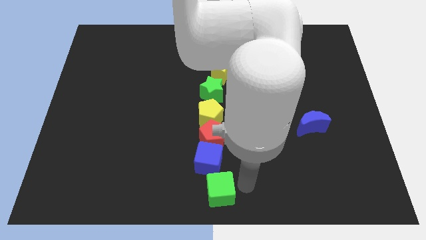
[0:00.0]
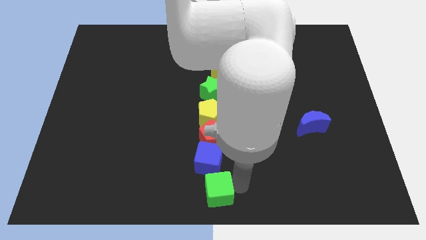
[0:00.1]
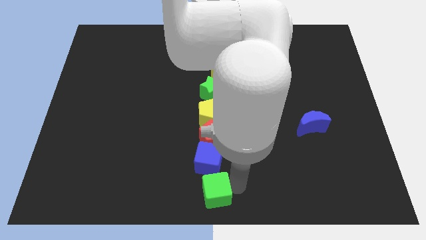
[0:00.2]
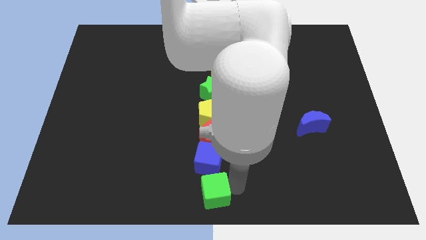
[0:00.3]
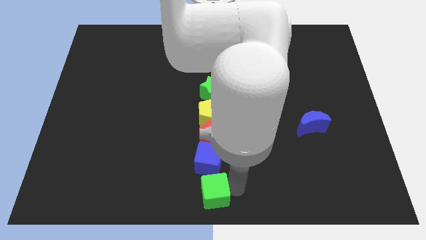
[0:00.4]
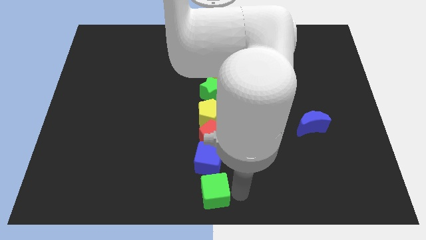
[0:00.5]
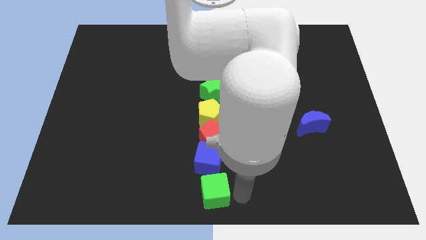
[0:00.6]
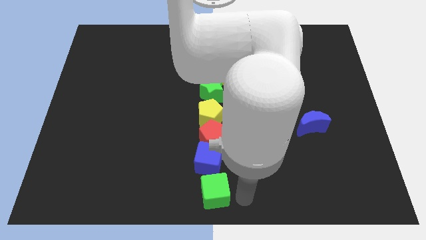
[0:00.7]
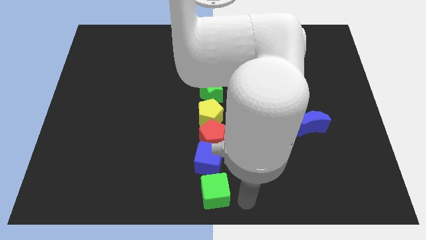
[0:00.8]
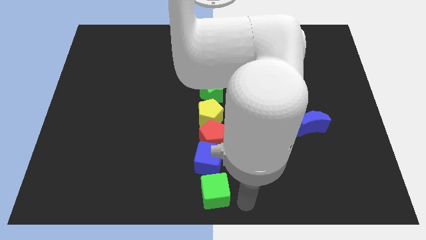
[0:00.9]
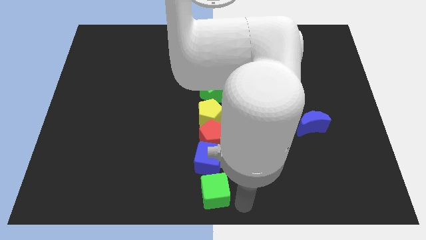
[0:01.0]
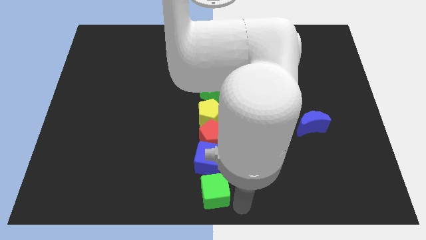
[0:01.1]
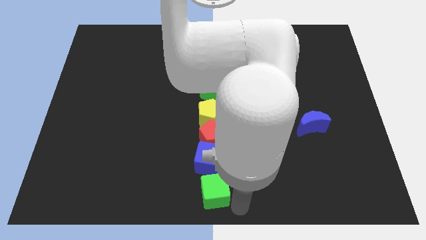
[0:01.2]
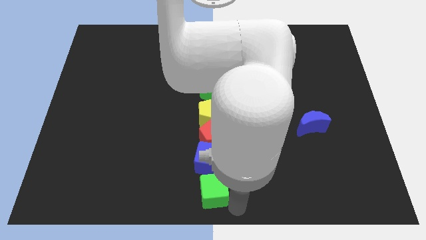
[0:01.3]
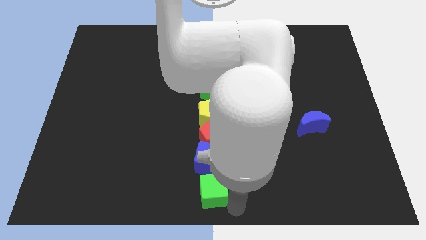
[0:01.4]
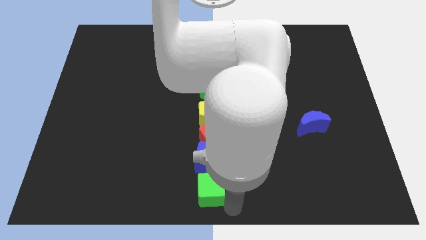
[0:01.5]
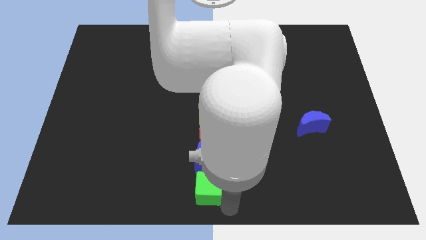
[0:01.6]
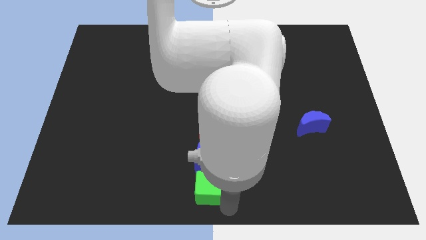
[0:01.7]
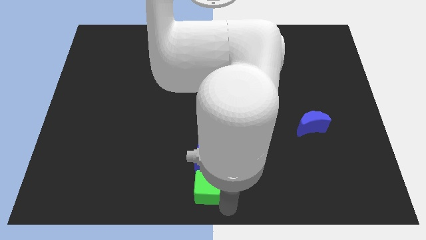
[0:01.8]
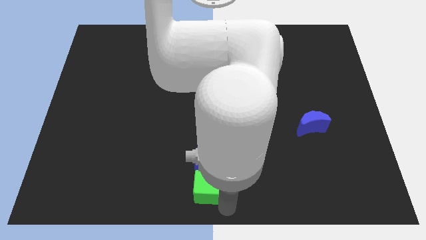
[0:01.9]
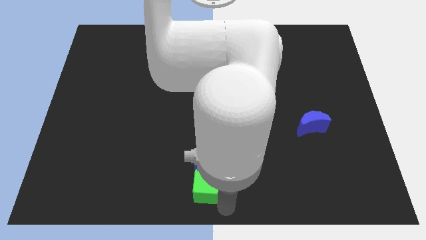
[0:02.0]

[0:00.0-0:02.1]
move the green cube below the blue cube

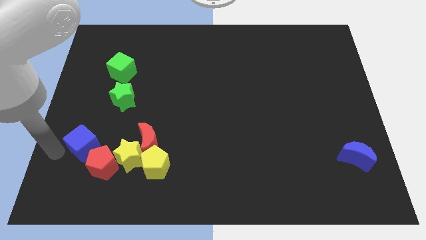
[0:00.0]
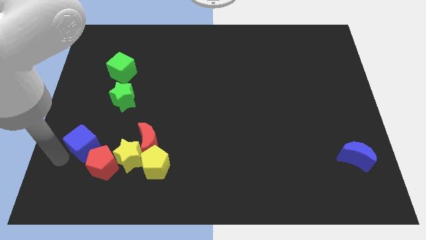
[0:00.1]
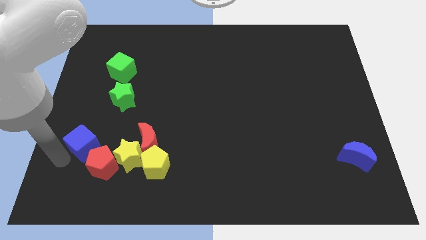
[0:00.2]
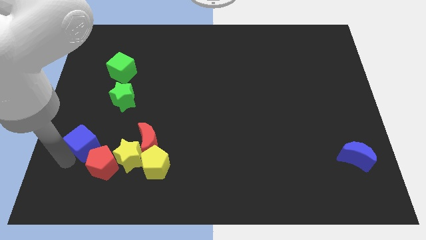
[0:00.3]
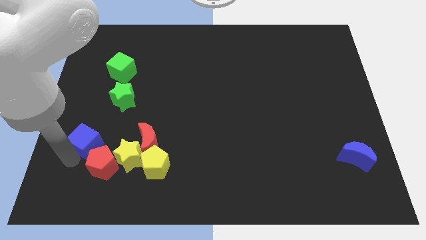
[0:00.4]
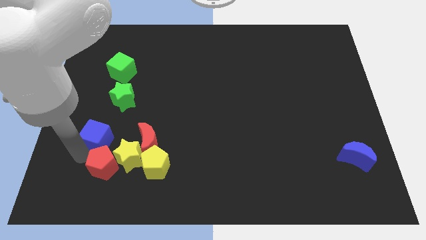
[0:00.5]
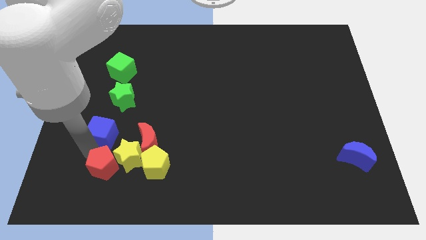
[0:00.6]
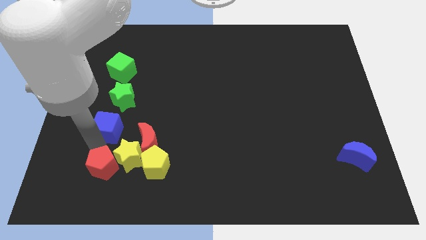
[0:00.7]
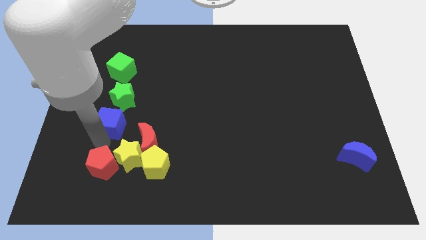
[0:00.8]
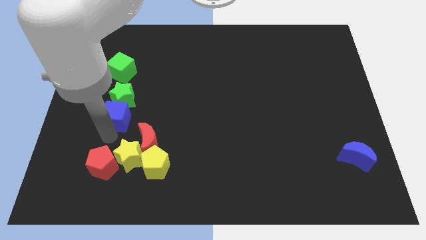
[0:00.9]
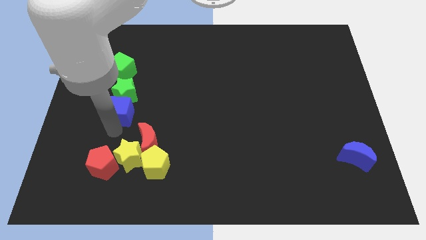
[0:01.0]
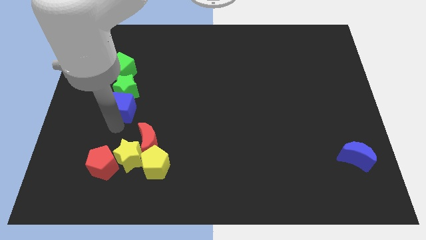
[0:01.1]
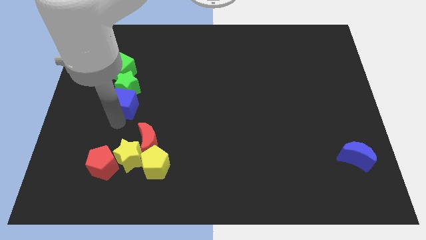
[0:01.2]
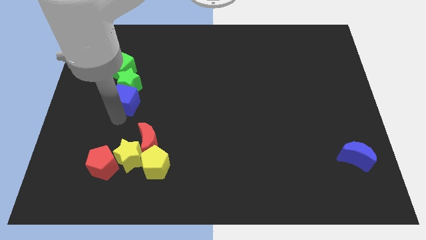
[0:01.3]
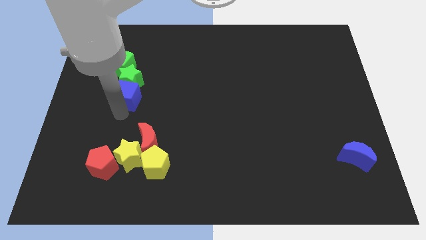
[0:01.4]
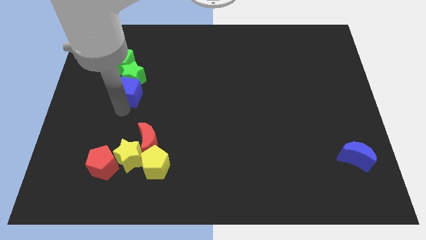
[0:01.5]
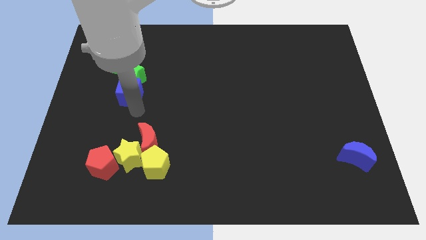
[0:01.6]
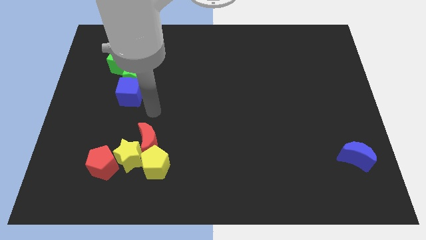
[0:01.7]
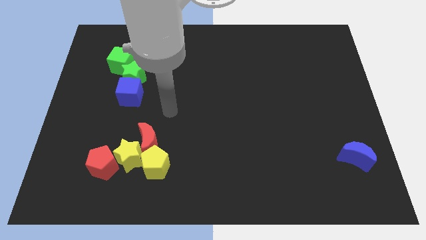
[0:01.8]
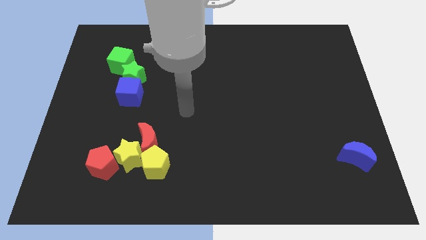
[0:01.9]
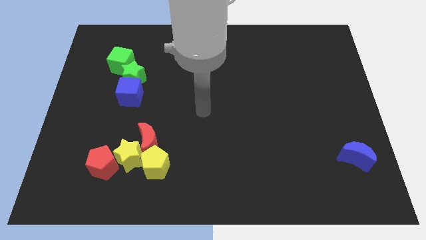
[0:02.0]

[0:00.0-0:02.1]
push the blue cube into the green blocks

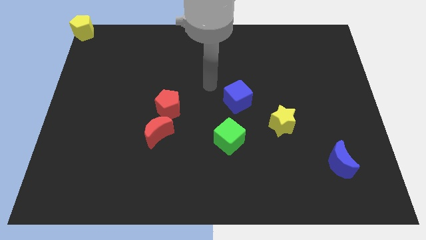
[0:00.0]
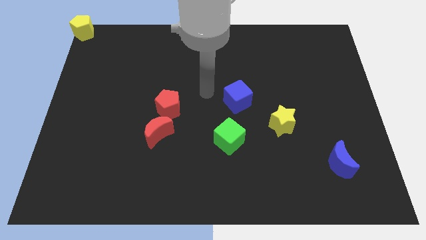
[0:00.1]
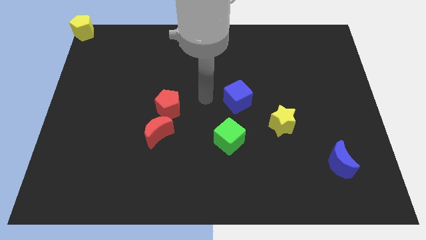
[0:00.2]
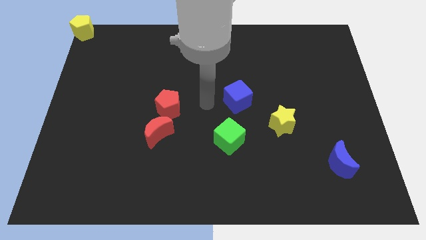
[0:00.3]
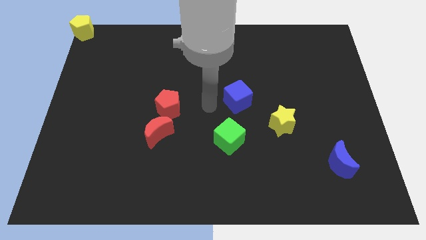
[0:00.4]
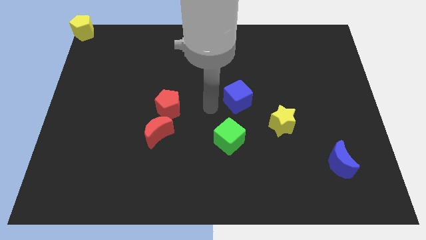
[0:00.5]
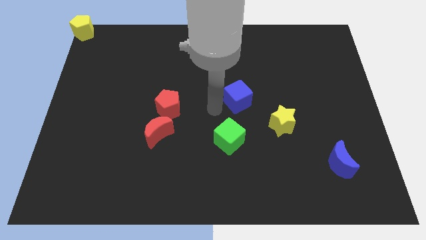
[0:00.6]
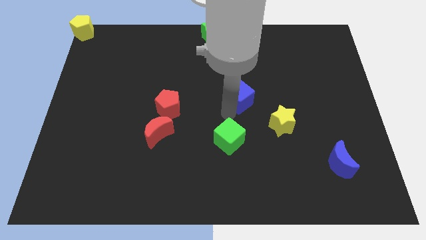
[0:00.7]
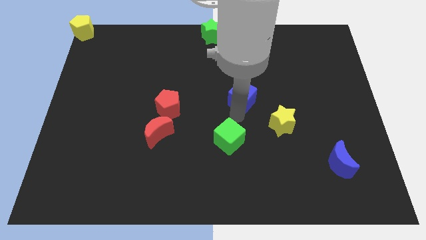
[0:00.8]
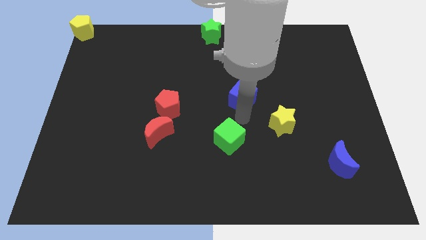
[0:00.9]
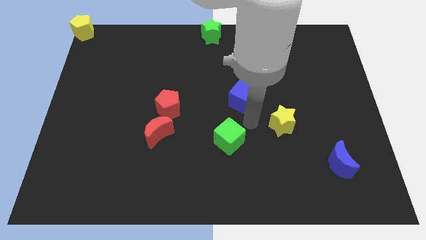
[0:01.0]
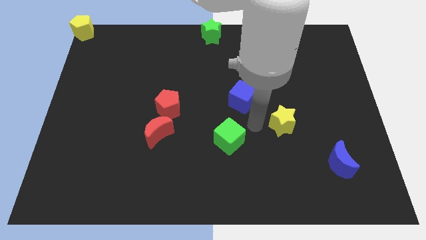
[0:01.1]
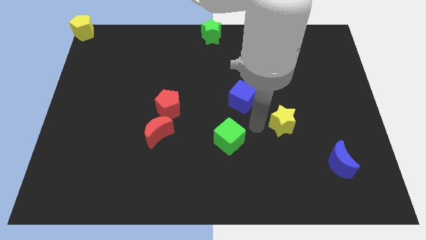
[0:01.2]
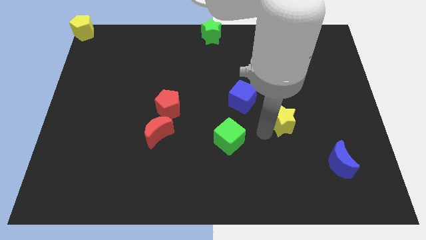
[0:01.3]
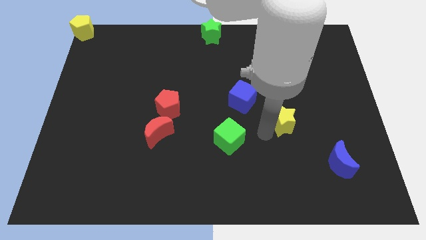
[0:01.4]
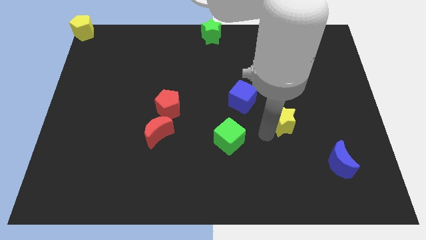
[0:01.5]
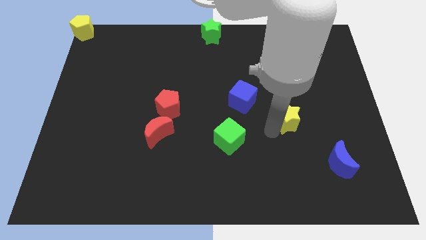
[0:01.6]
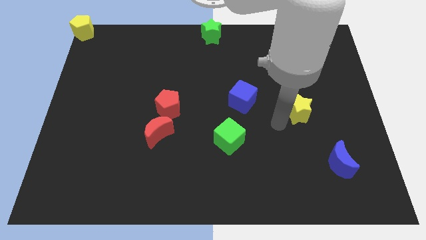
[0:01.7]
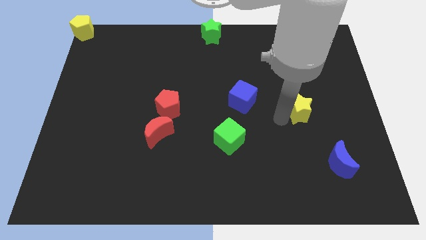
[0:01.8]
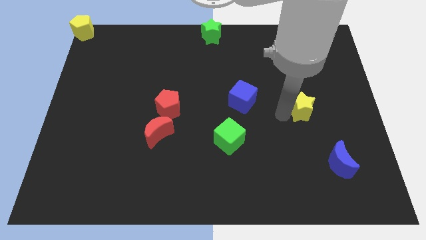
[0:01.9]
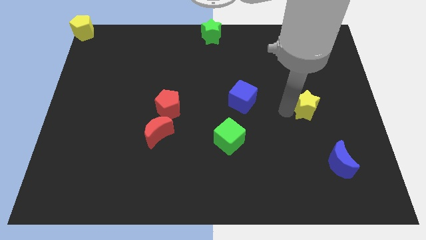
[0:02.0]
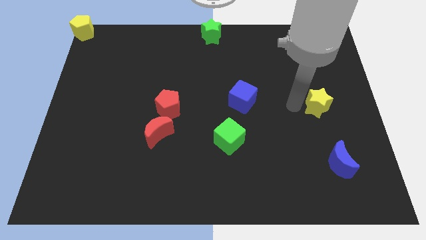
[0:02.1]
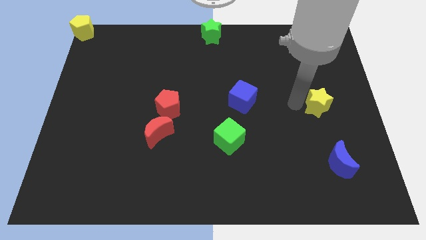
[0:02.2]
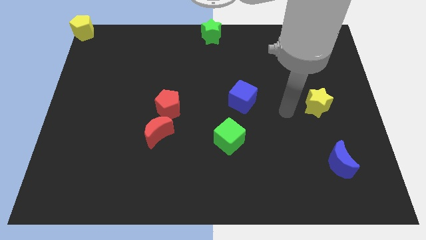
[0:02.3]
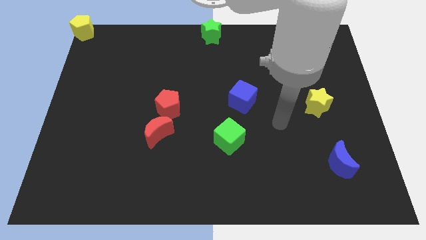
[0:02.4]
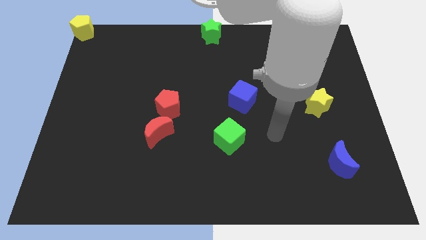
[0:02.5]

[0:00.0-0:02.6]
move the yellow star to the right

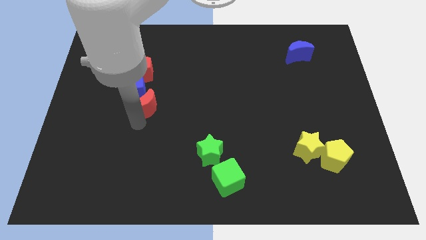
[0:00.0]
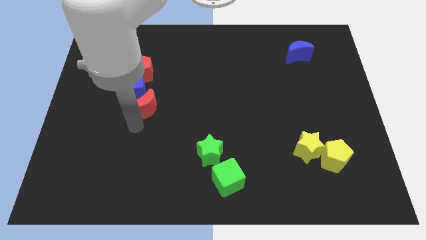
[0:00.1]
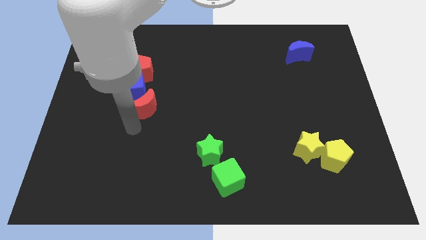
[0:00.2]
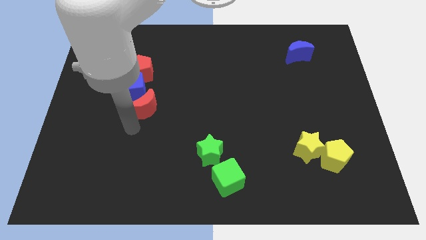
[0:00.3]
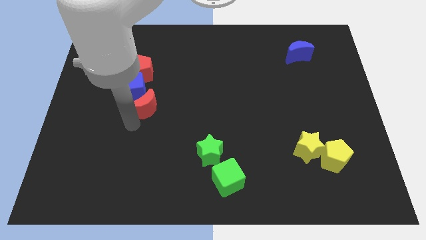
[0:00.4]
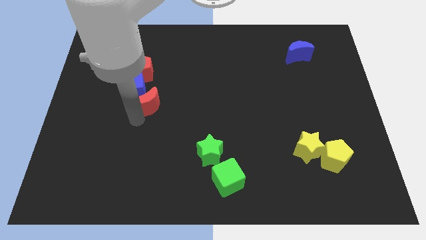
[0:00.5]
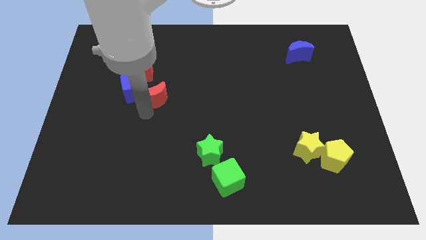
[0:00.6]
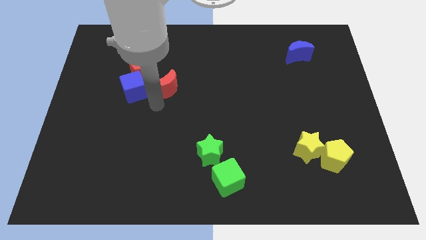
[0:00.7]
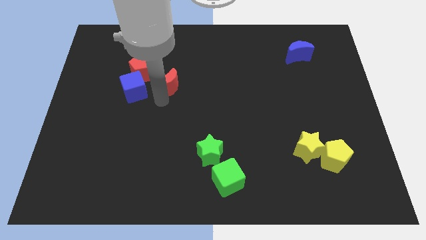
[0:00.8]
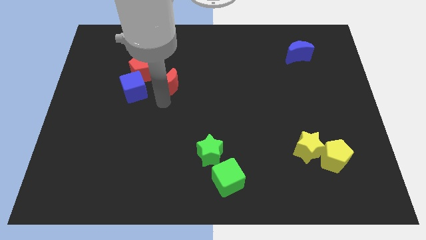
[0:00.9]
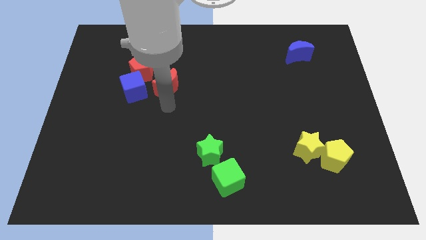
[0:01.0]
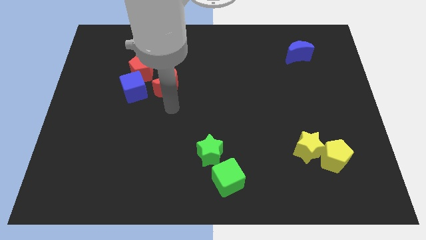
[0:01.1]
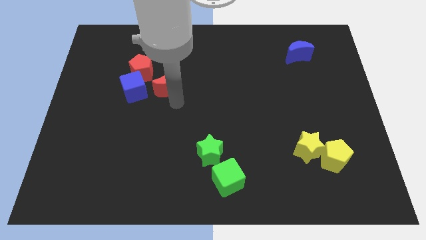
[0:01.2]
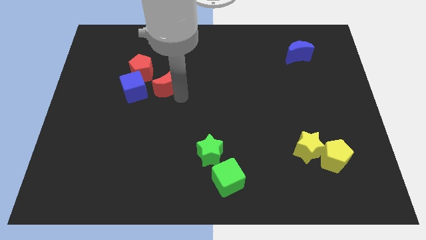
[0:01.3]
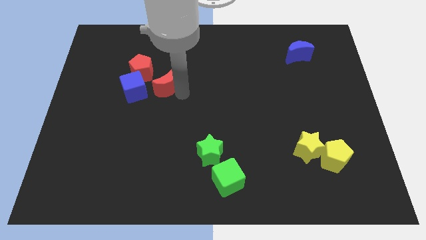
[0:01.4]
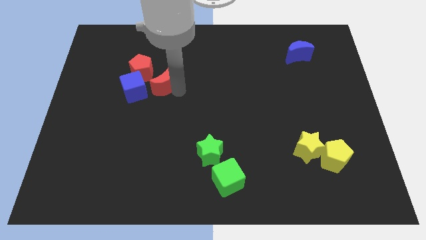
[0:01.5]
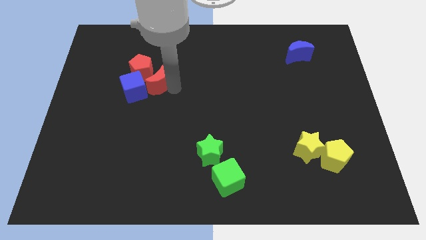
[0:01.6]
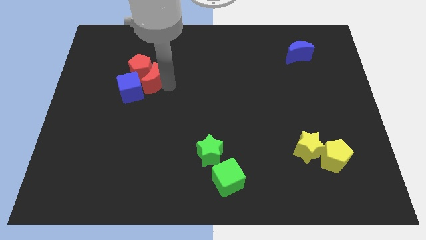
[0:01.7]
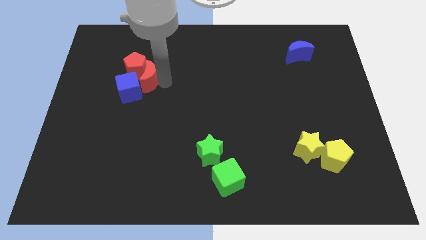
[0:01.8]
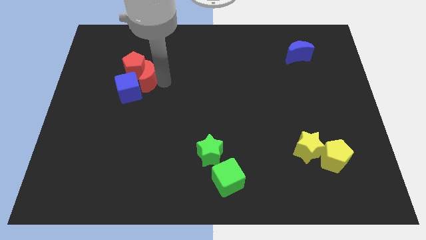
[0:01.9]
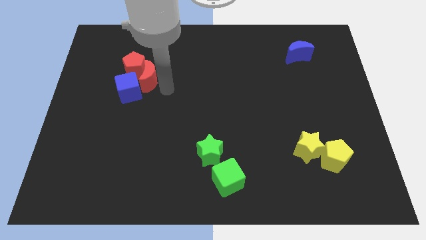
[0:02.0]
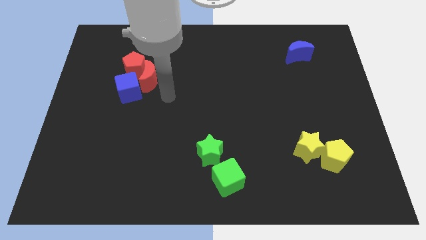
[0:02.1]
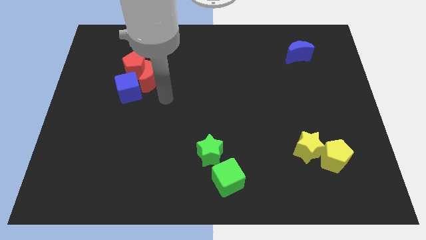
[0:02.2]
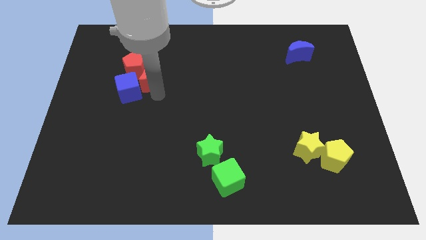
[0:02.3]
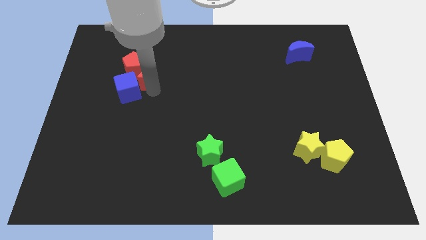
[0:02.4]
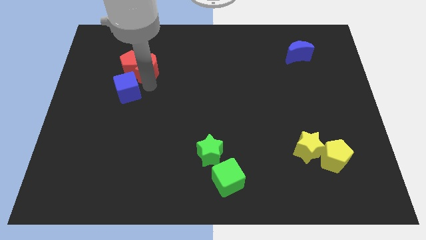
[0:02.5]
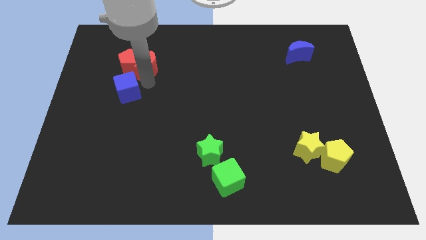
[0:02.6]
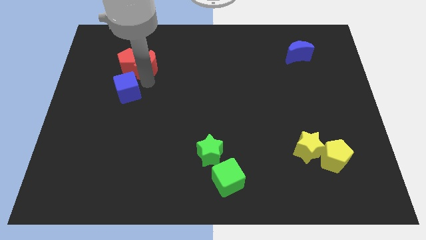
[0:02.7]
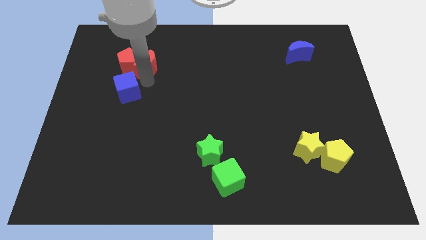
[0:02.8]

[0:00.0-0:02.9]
push the red crescent into red pentagon
